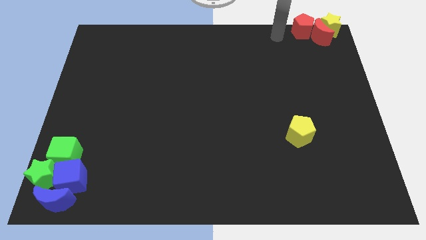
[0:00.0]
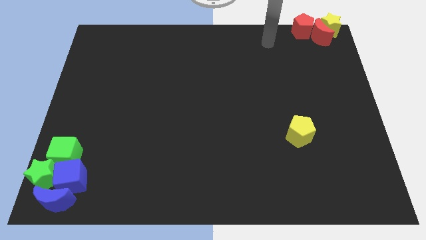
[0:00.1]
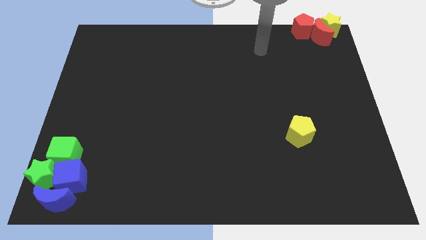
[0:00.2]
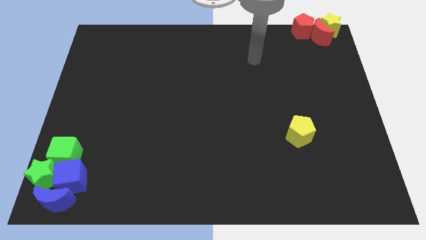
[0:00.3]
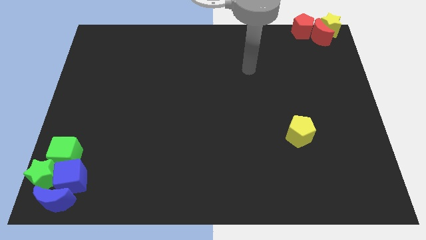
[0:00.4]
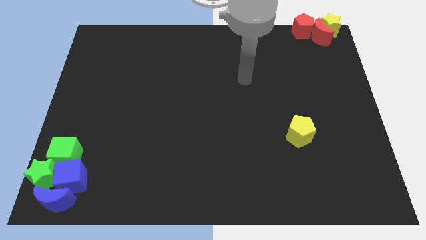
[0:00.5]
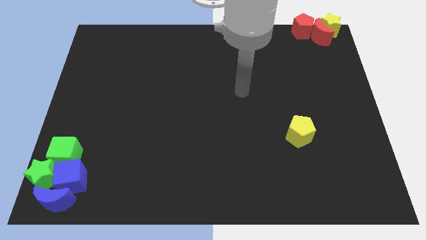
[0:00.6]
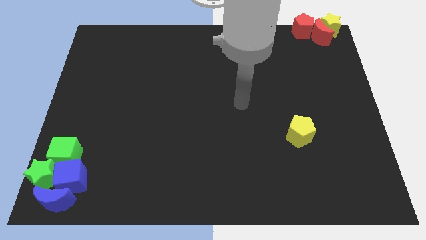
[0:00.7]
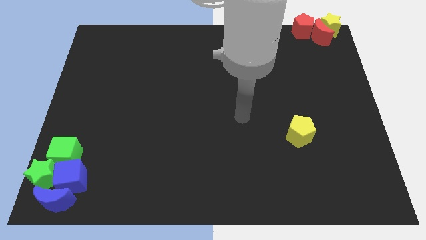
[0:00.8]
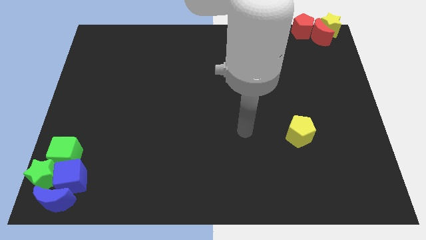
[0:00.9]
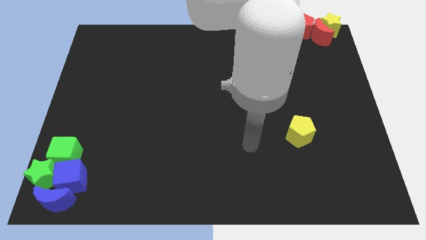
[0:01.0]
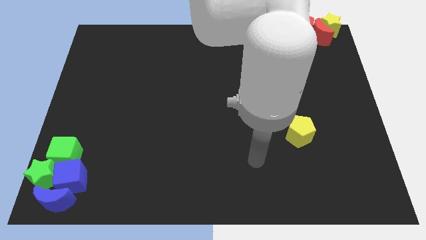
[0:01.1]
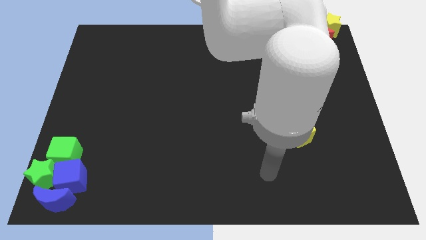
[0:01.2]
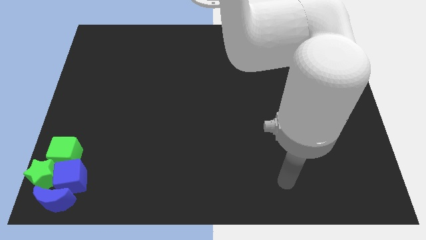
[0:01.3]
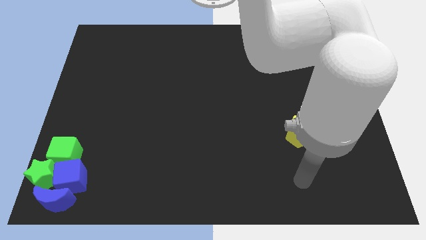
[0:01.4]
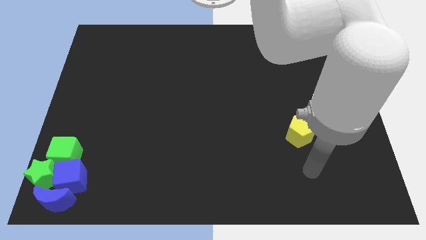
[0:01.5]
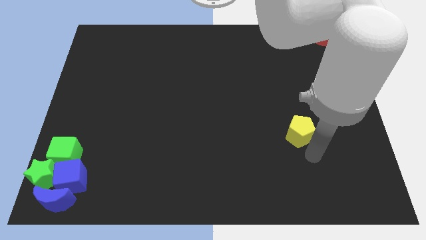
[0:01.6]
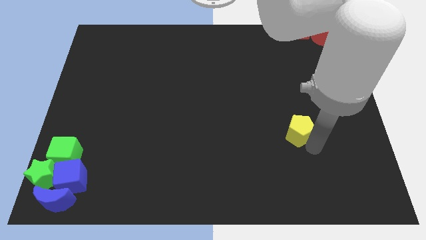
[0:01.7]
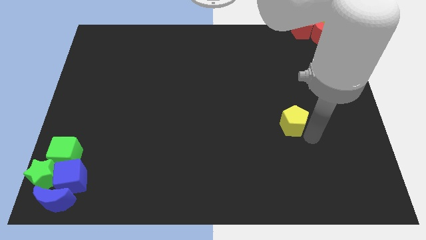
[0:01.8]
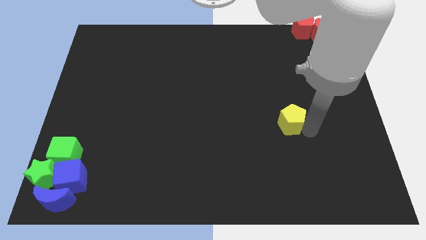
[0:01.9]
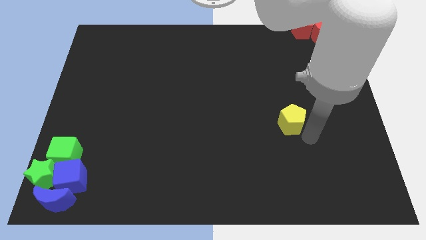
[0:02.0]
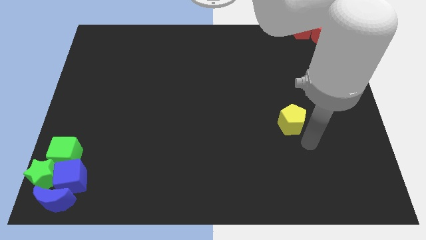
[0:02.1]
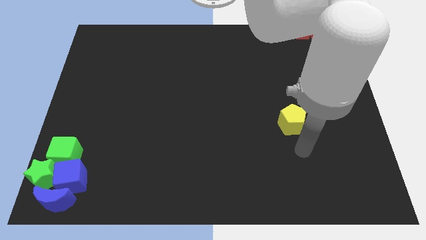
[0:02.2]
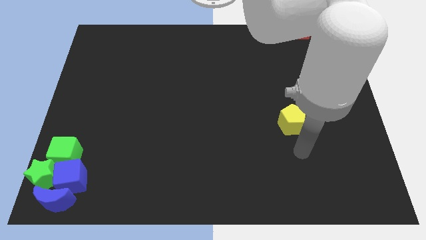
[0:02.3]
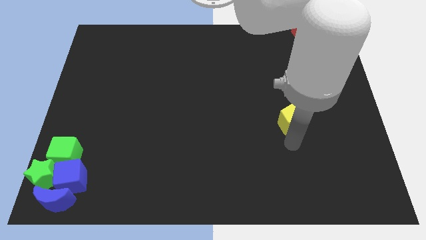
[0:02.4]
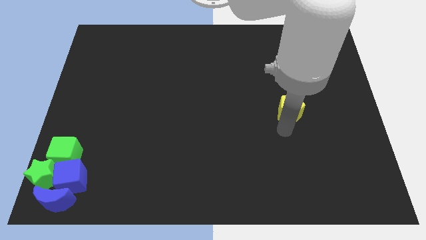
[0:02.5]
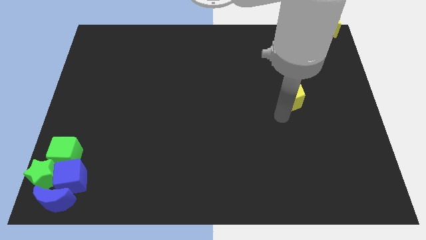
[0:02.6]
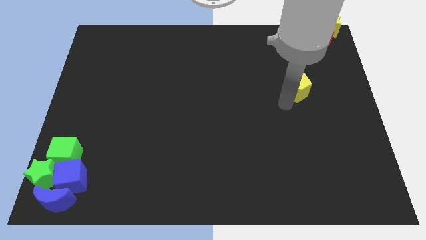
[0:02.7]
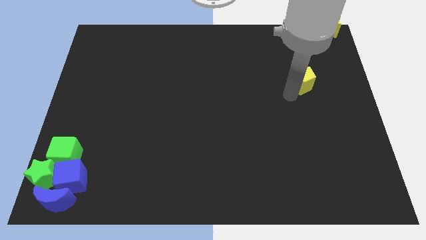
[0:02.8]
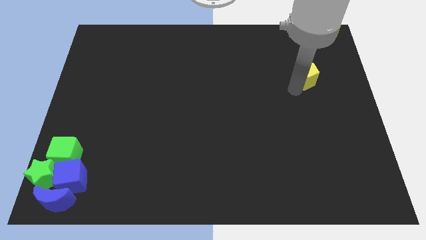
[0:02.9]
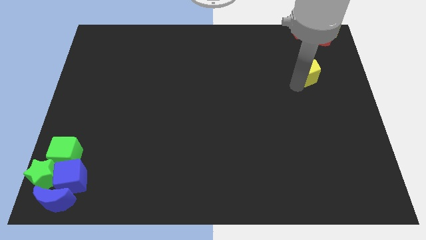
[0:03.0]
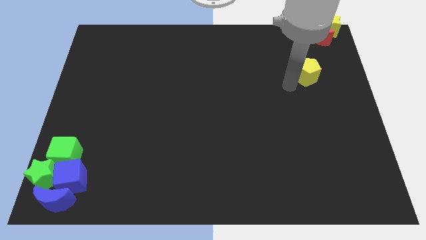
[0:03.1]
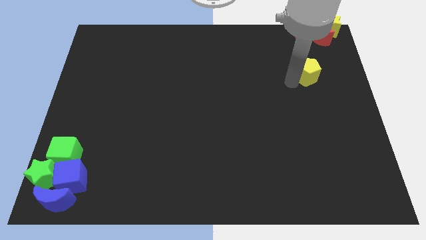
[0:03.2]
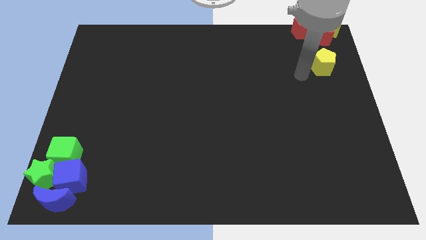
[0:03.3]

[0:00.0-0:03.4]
move the yellow pentagon to the bottom side of the red crescent

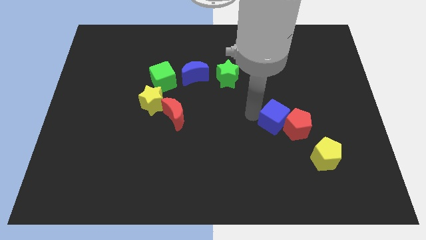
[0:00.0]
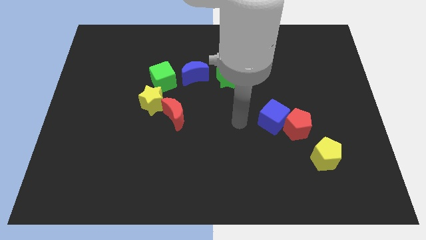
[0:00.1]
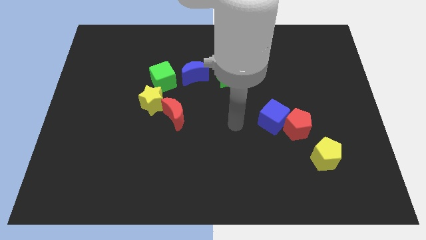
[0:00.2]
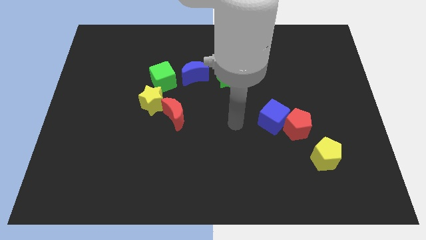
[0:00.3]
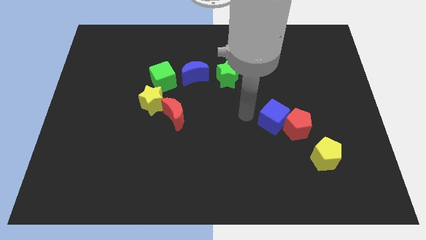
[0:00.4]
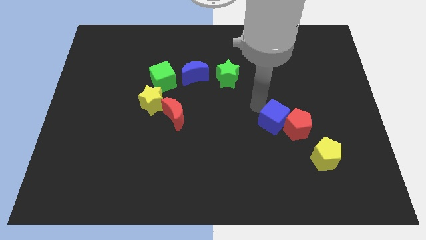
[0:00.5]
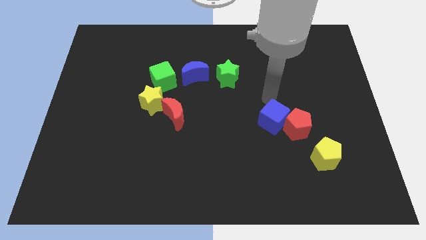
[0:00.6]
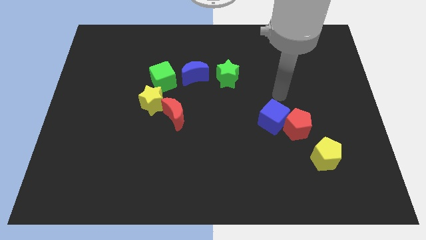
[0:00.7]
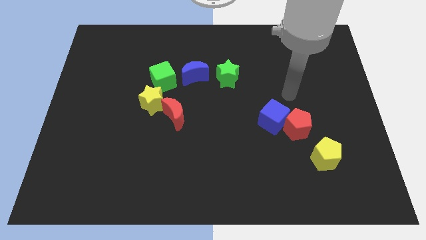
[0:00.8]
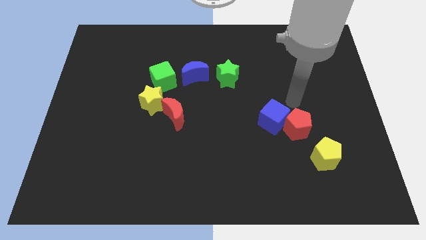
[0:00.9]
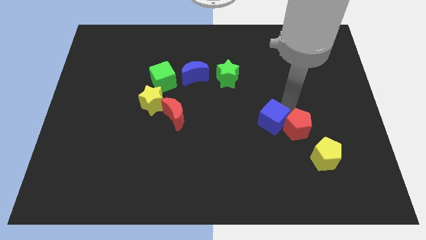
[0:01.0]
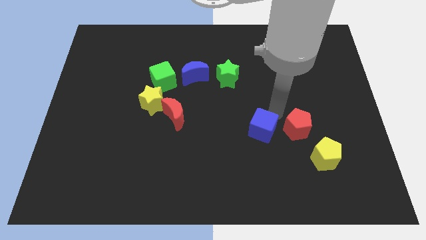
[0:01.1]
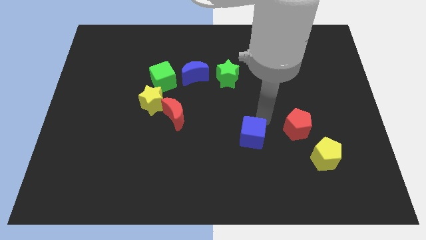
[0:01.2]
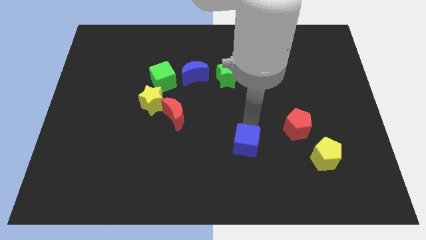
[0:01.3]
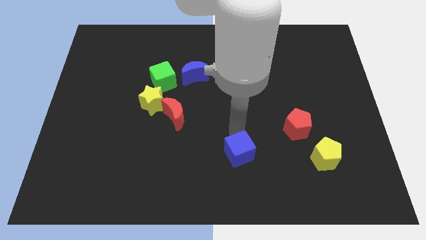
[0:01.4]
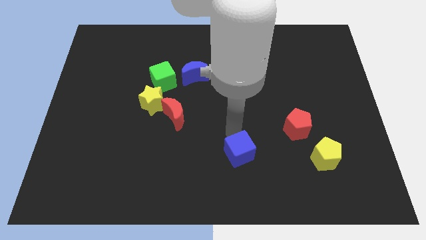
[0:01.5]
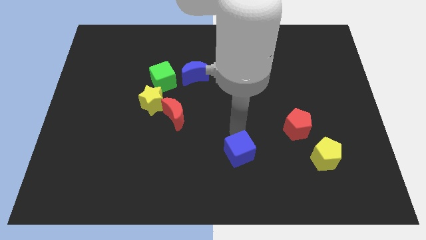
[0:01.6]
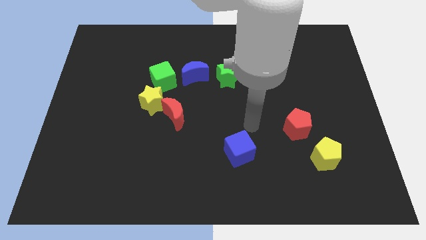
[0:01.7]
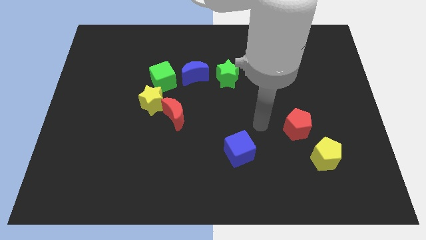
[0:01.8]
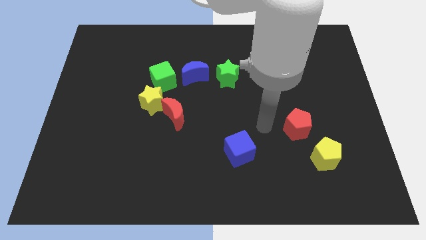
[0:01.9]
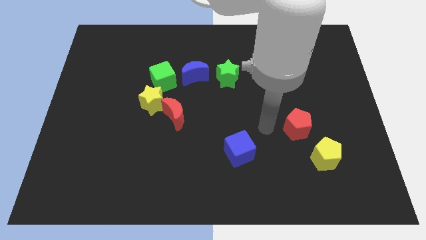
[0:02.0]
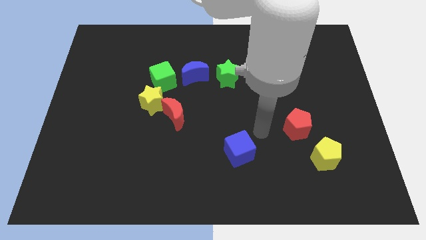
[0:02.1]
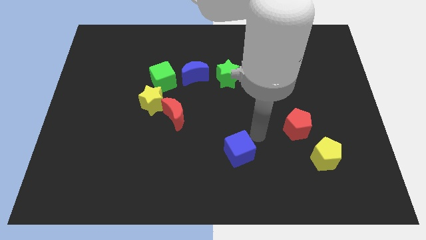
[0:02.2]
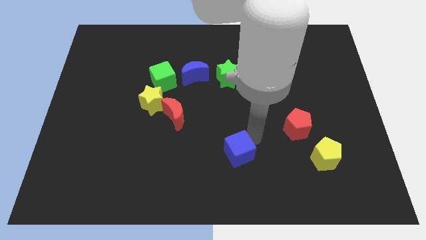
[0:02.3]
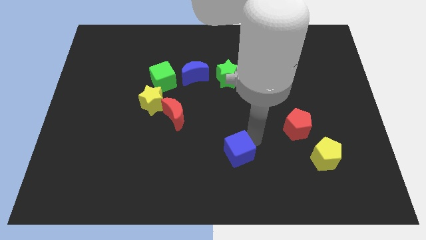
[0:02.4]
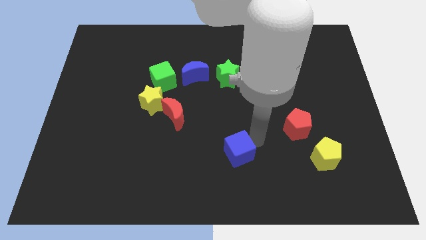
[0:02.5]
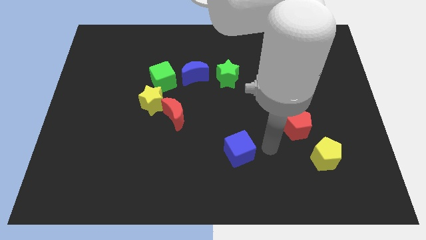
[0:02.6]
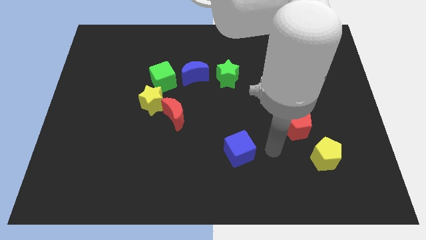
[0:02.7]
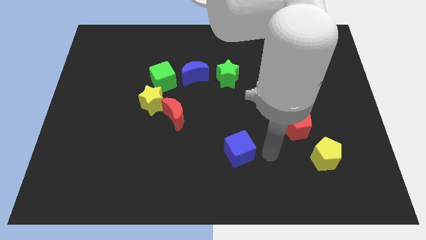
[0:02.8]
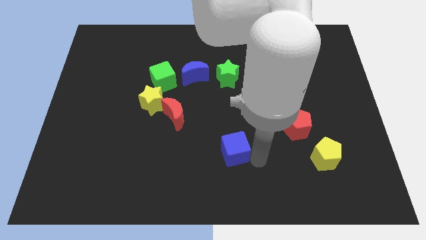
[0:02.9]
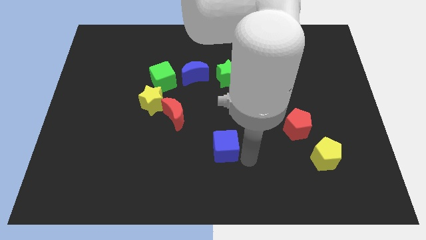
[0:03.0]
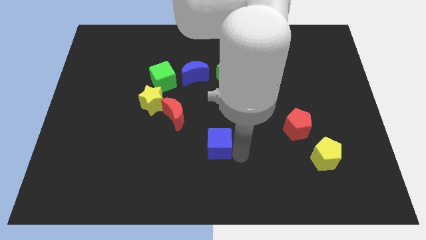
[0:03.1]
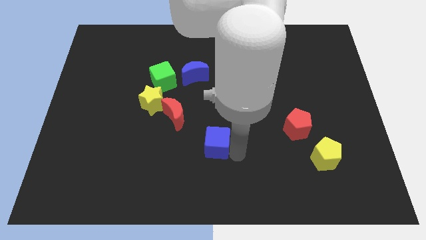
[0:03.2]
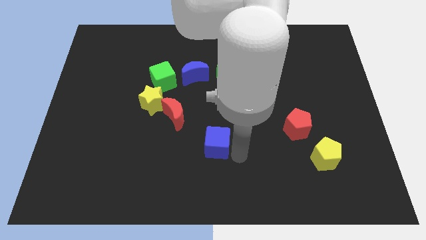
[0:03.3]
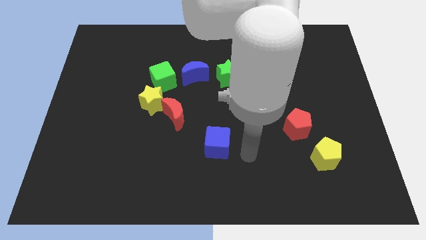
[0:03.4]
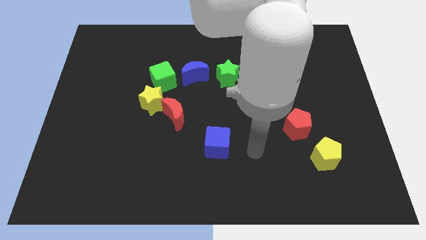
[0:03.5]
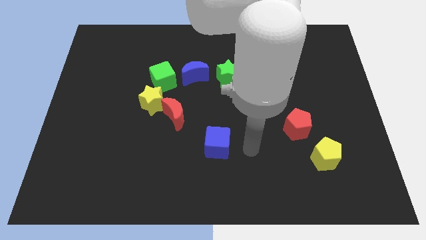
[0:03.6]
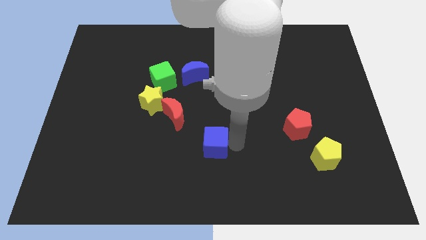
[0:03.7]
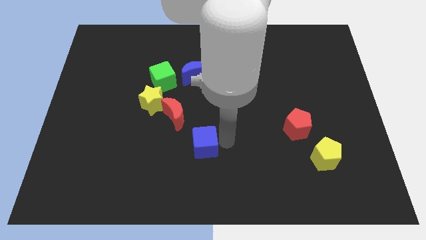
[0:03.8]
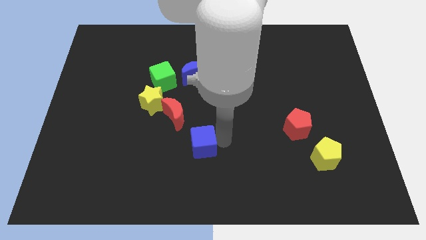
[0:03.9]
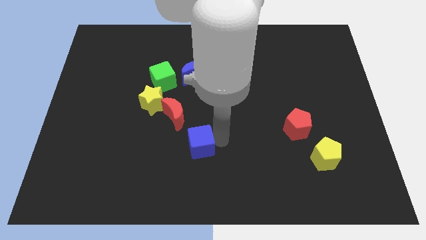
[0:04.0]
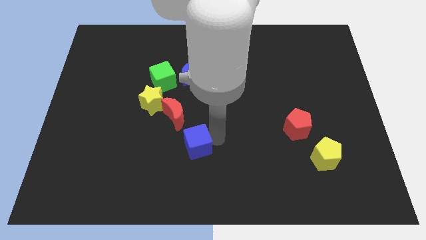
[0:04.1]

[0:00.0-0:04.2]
push the blue cube closer to the red moon

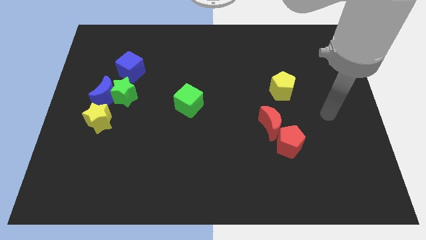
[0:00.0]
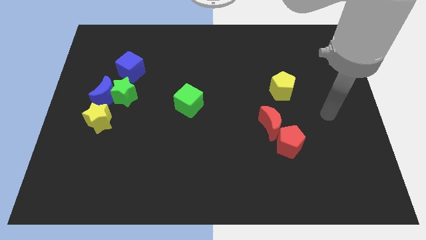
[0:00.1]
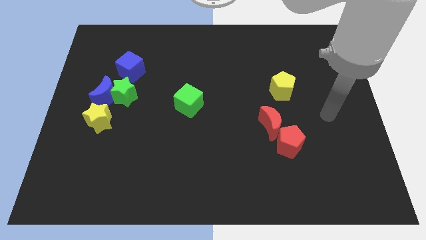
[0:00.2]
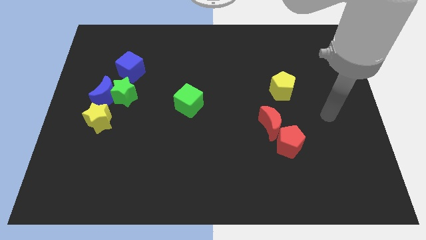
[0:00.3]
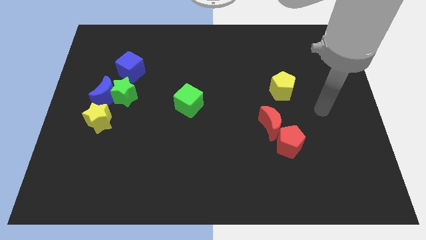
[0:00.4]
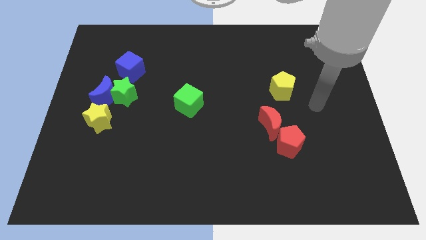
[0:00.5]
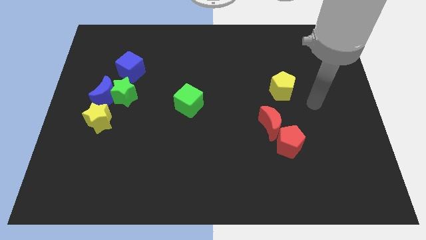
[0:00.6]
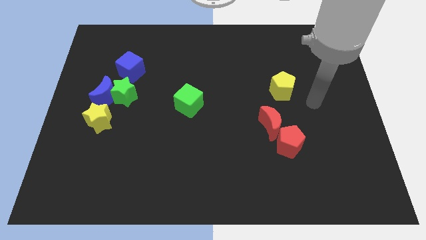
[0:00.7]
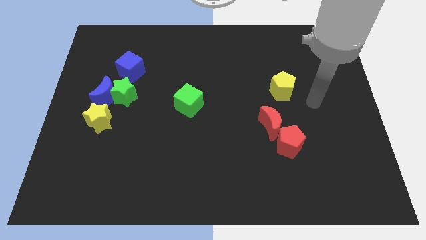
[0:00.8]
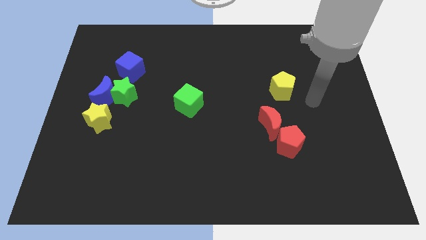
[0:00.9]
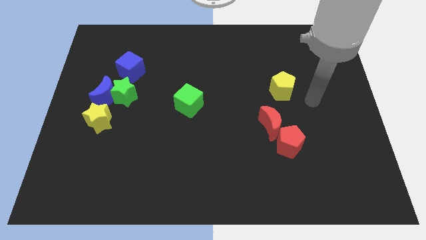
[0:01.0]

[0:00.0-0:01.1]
slide your arm near to the yellow pentagon

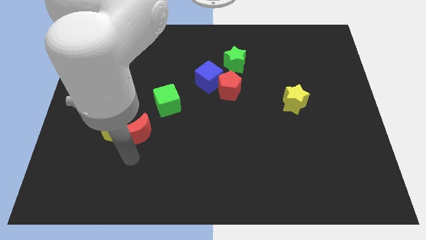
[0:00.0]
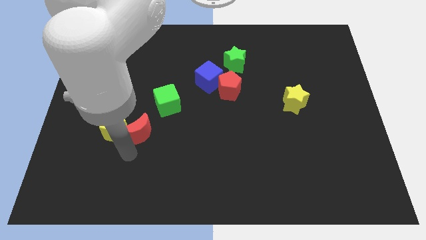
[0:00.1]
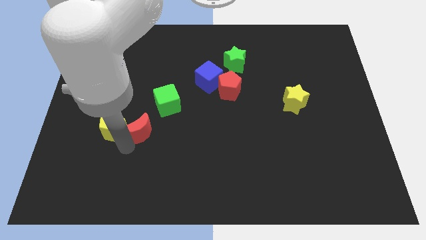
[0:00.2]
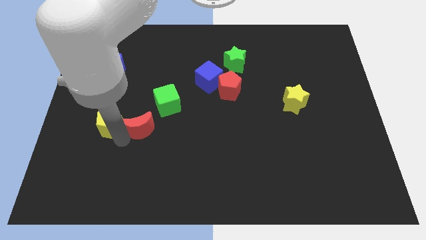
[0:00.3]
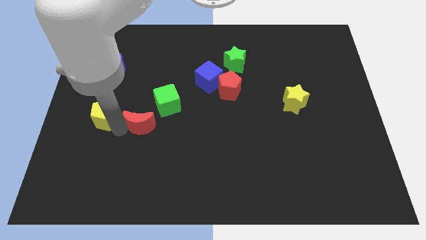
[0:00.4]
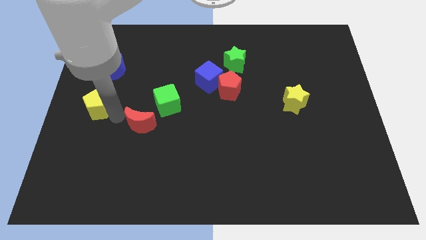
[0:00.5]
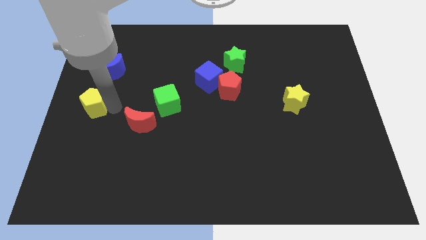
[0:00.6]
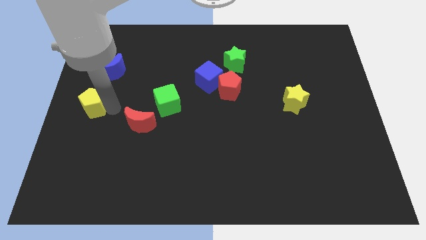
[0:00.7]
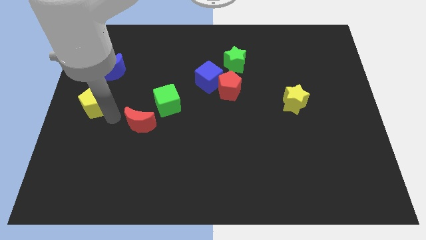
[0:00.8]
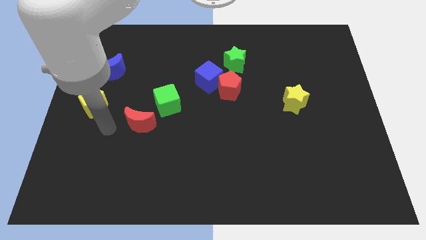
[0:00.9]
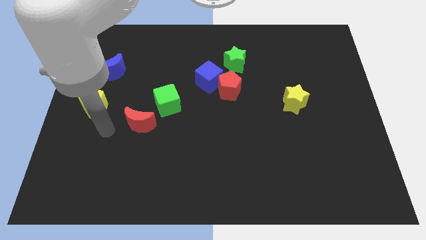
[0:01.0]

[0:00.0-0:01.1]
separate yellow pentagon from red moon
